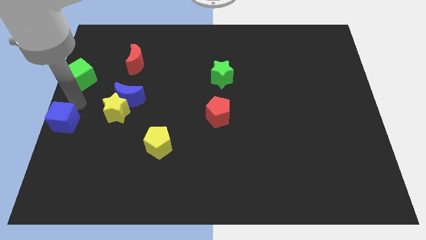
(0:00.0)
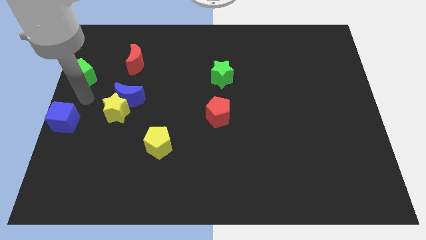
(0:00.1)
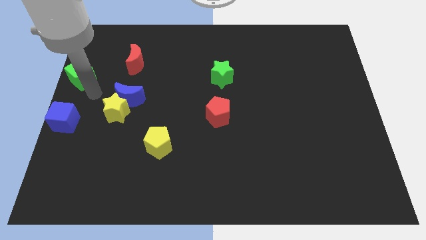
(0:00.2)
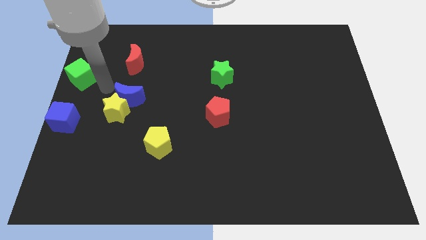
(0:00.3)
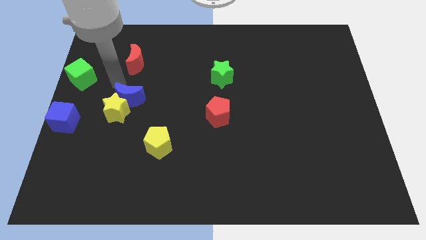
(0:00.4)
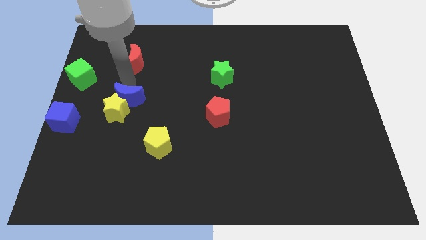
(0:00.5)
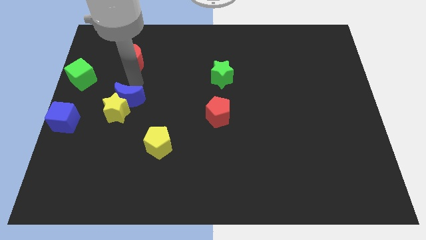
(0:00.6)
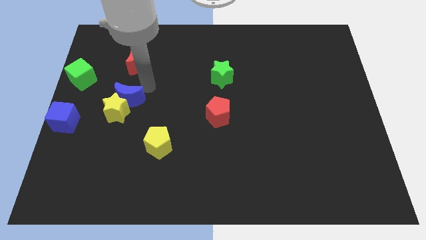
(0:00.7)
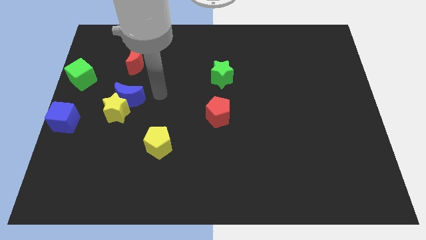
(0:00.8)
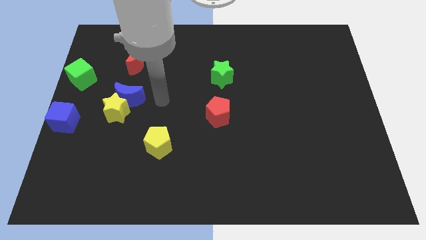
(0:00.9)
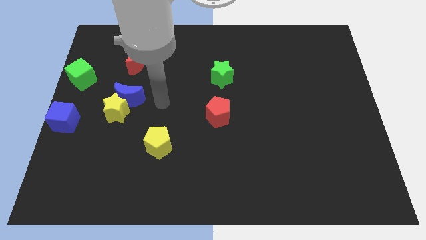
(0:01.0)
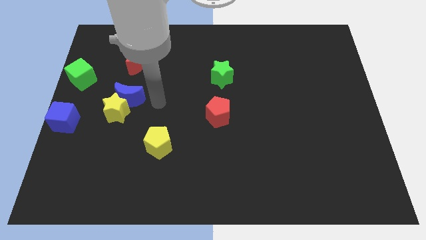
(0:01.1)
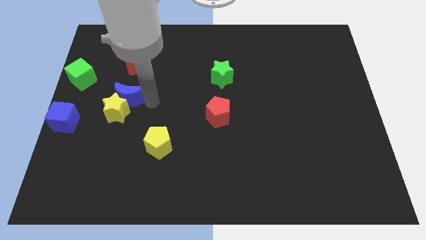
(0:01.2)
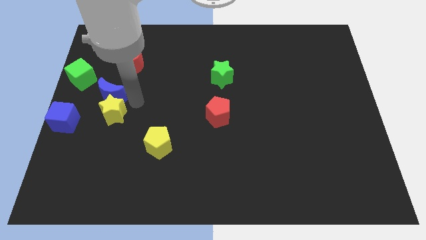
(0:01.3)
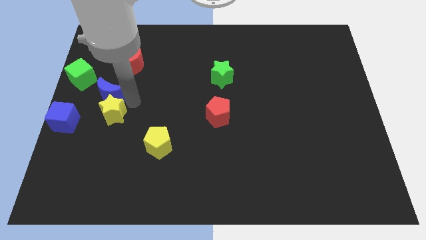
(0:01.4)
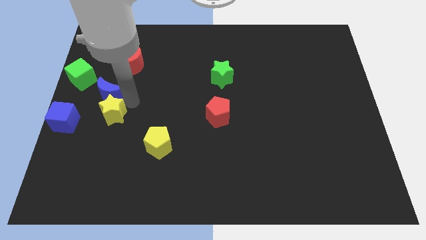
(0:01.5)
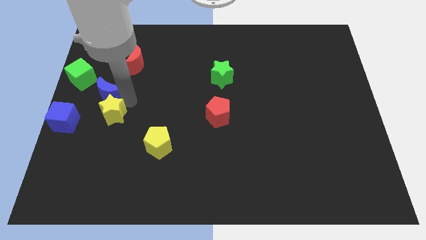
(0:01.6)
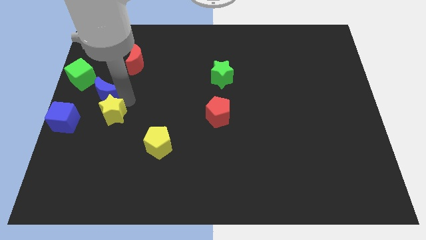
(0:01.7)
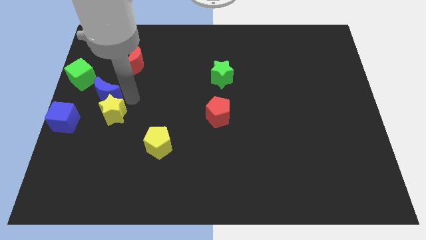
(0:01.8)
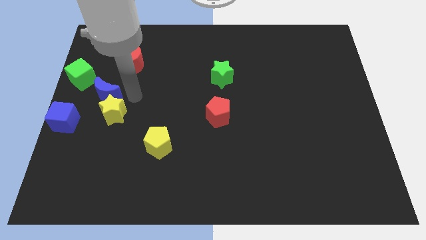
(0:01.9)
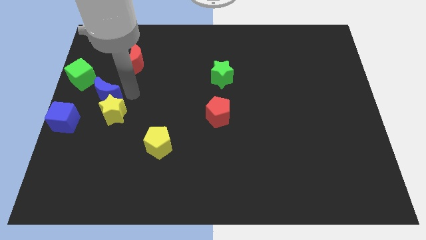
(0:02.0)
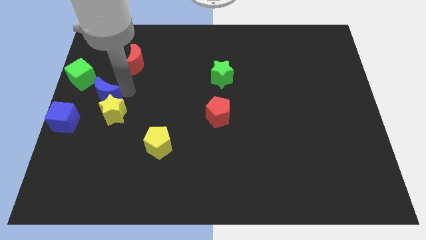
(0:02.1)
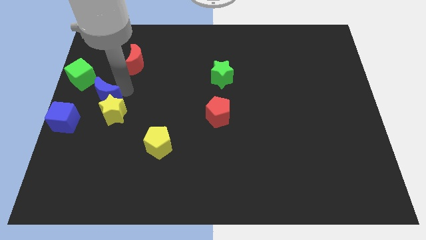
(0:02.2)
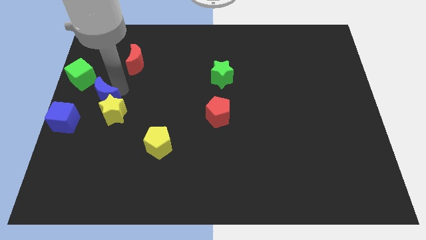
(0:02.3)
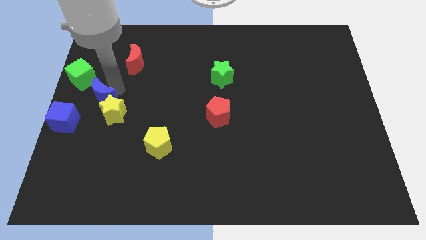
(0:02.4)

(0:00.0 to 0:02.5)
push the blue crescent slightly to the left

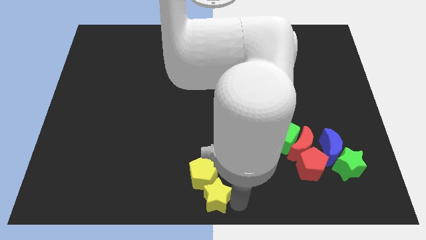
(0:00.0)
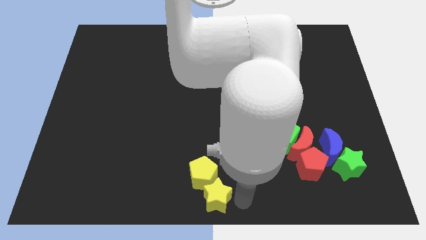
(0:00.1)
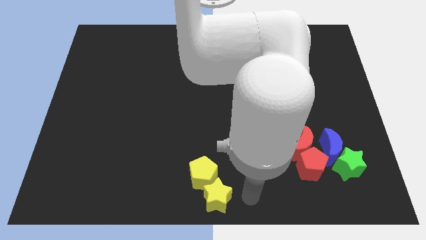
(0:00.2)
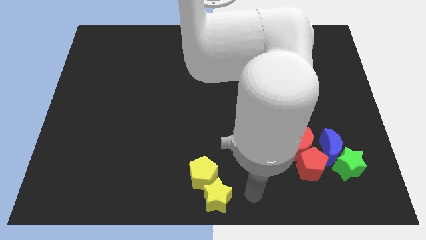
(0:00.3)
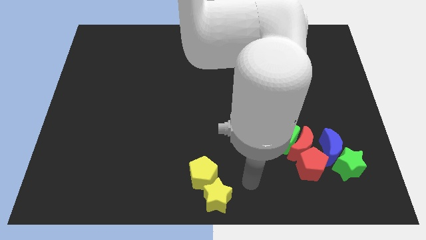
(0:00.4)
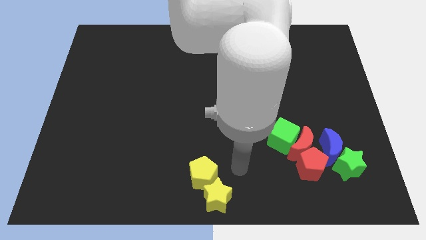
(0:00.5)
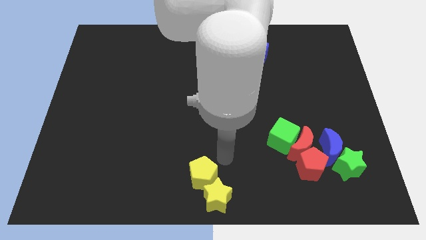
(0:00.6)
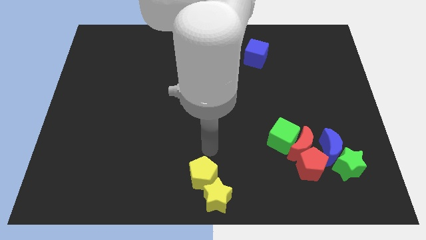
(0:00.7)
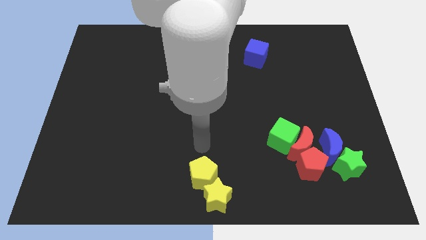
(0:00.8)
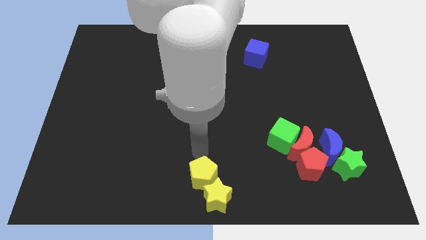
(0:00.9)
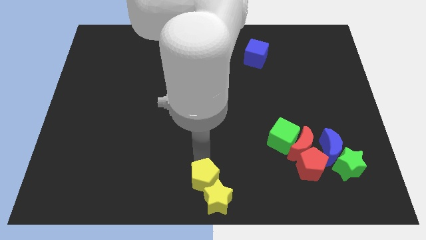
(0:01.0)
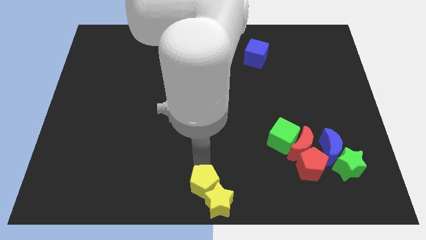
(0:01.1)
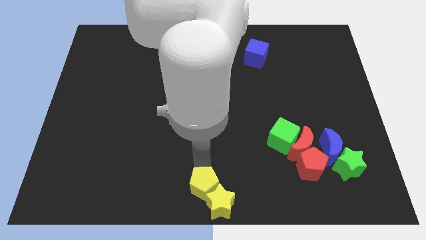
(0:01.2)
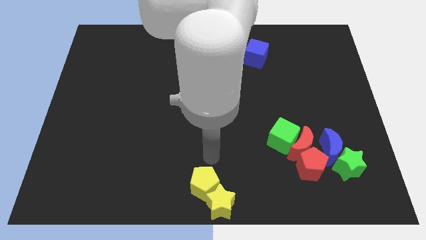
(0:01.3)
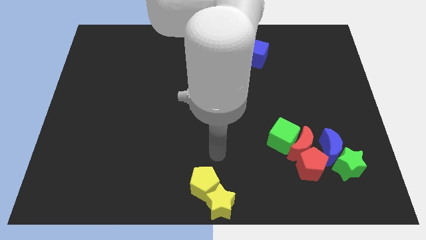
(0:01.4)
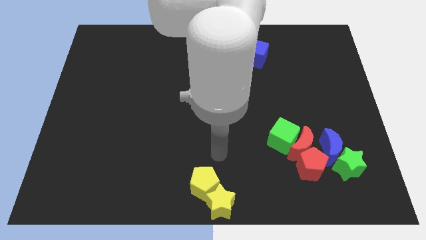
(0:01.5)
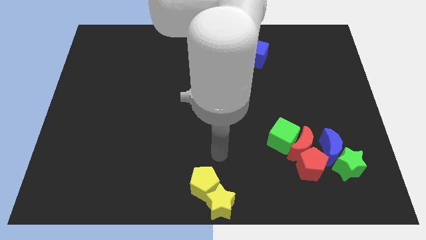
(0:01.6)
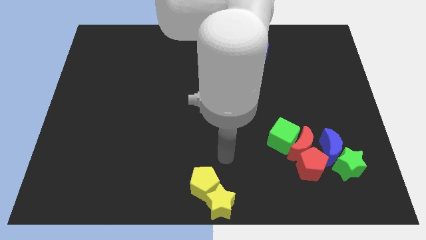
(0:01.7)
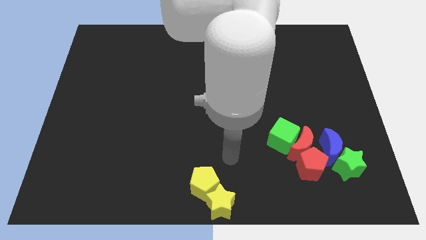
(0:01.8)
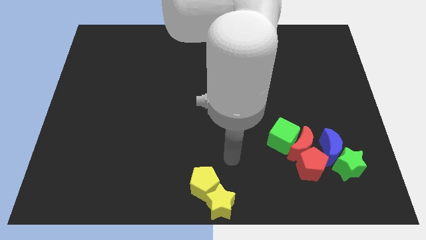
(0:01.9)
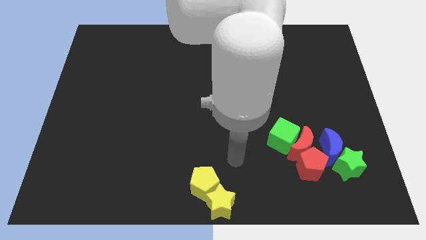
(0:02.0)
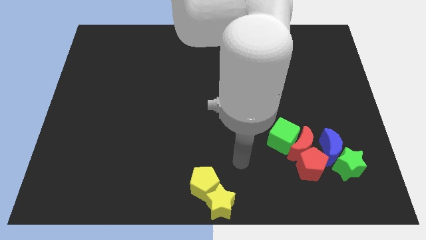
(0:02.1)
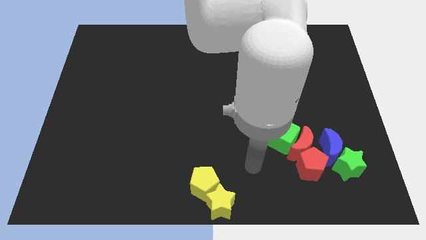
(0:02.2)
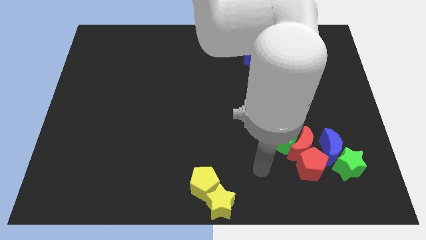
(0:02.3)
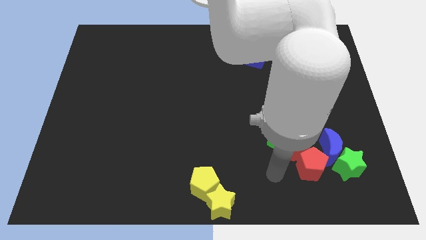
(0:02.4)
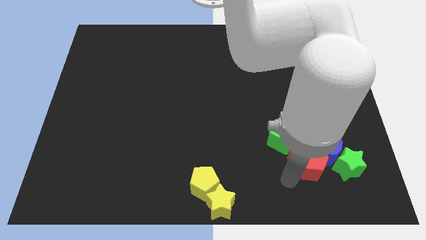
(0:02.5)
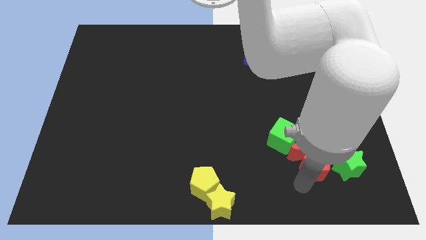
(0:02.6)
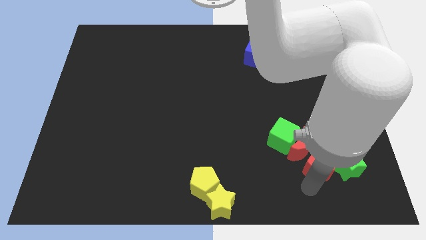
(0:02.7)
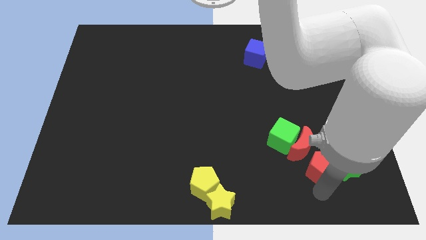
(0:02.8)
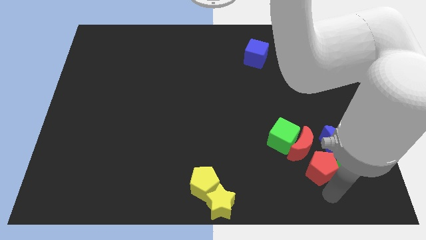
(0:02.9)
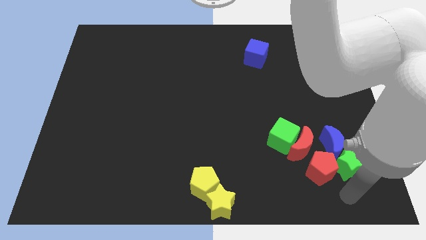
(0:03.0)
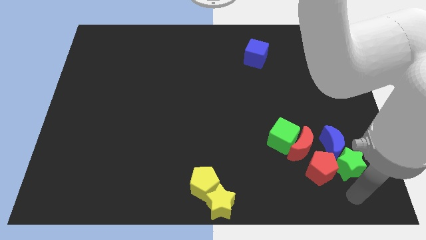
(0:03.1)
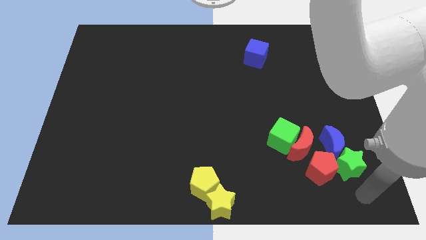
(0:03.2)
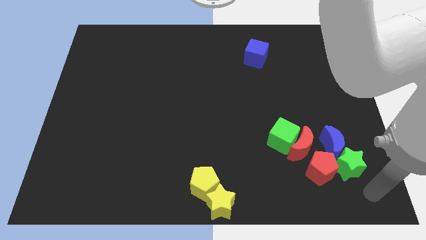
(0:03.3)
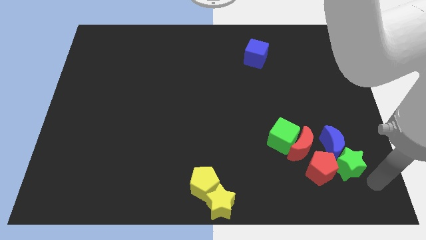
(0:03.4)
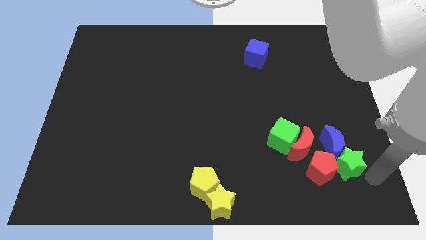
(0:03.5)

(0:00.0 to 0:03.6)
slightly push the yellow blocks to the bottom centre of the board

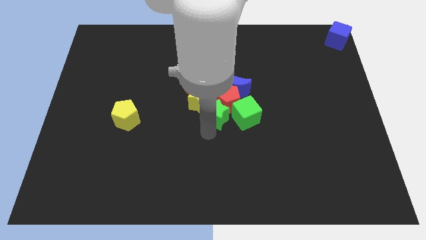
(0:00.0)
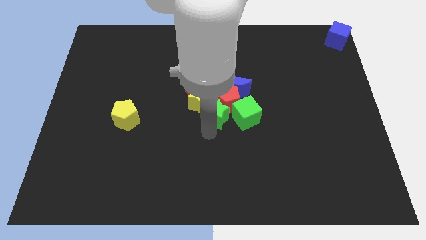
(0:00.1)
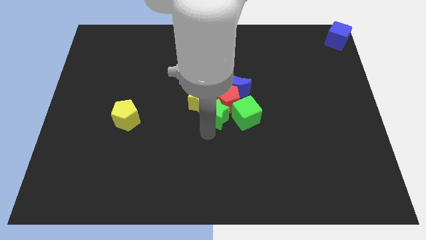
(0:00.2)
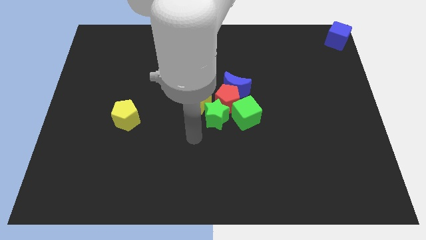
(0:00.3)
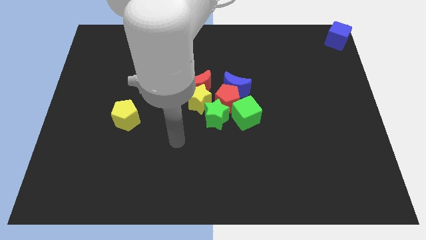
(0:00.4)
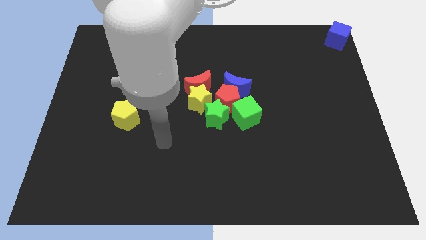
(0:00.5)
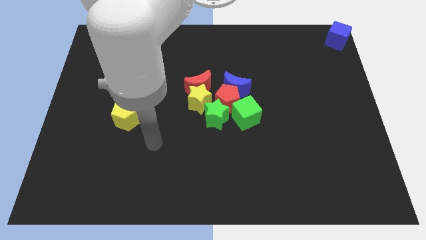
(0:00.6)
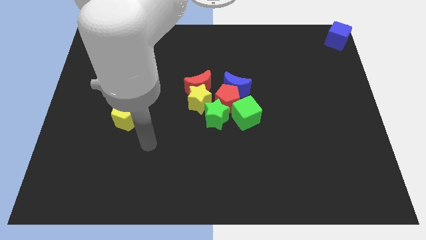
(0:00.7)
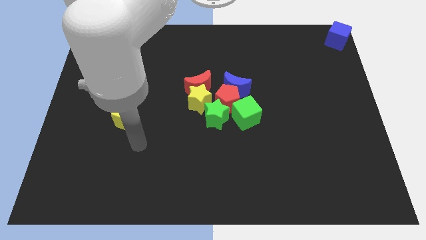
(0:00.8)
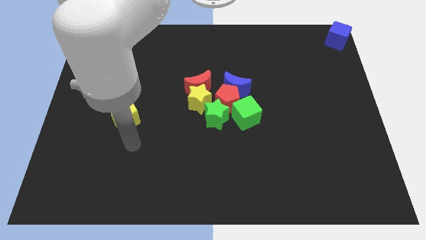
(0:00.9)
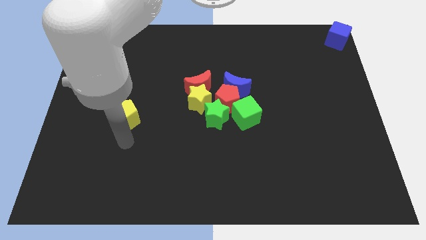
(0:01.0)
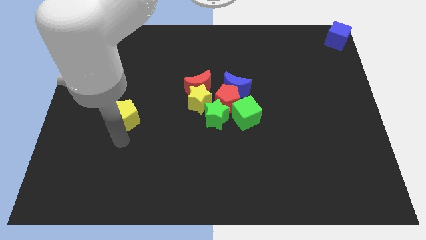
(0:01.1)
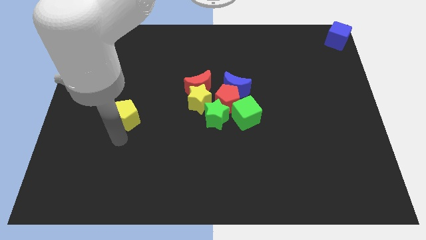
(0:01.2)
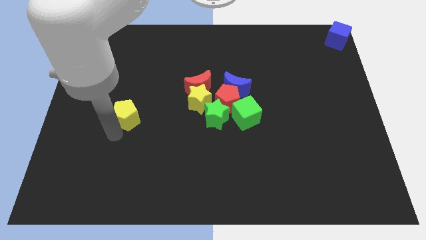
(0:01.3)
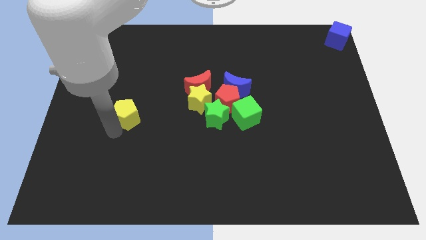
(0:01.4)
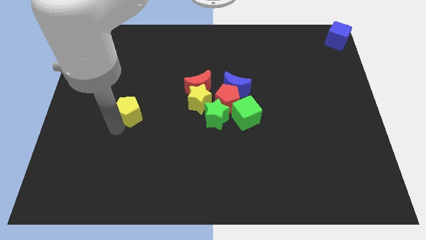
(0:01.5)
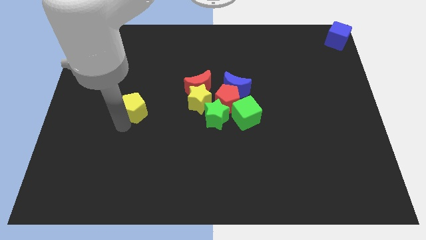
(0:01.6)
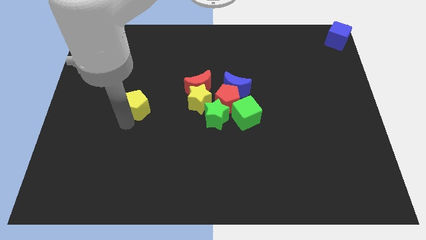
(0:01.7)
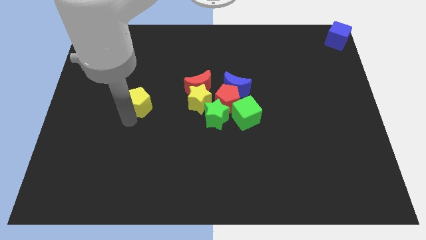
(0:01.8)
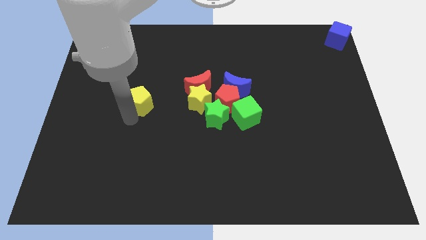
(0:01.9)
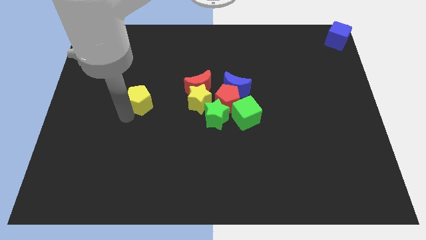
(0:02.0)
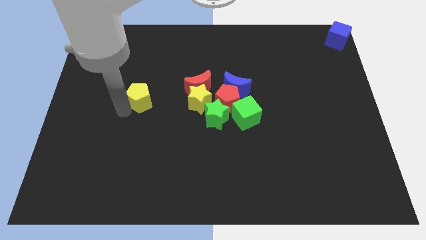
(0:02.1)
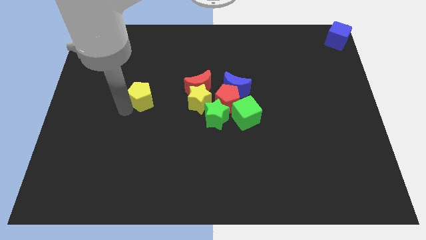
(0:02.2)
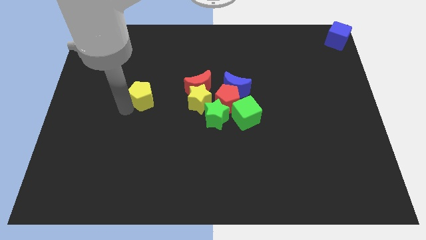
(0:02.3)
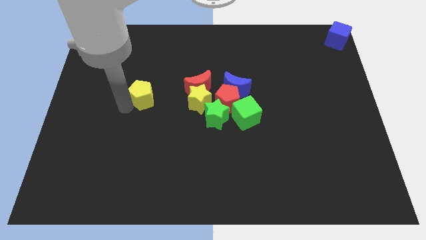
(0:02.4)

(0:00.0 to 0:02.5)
push yellow pentagon upwards

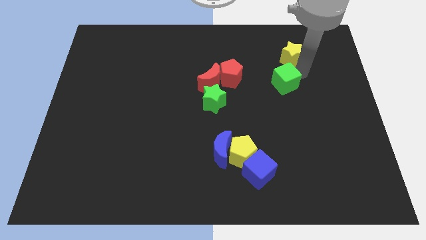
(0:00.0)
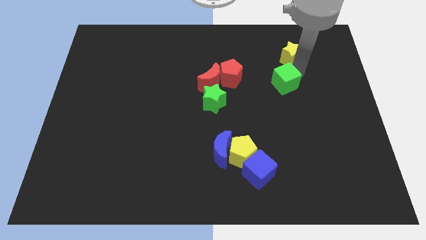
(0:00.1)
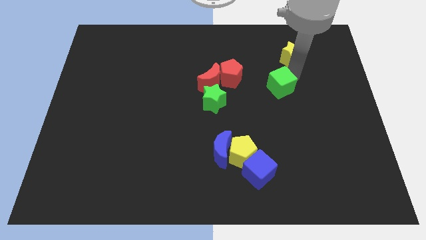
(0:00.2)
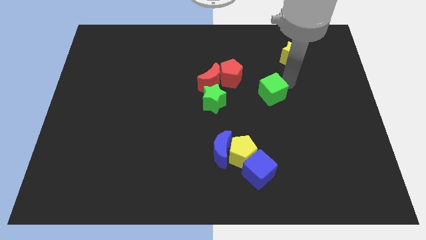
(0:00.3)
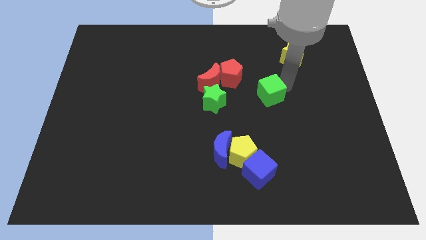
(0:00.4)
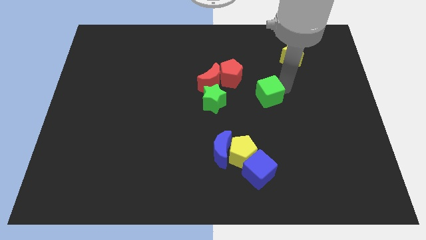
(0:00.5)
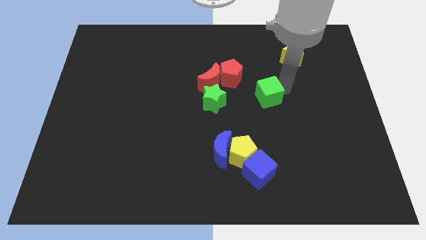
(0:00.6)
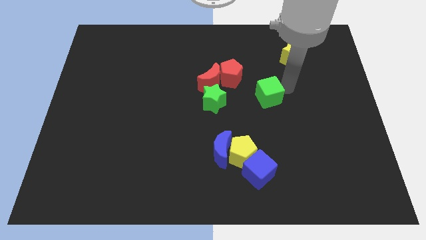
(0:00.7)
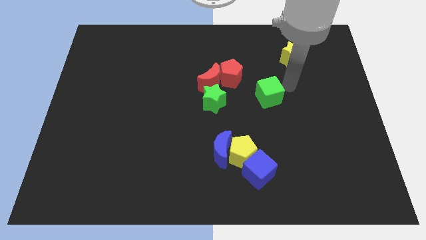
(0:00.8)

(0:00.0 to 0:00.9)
slide green cube to the bottom center
